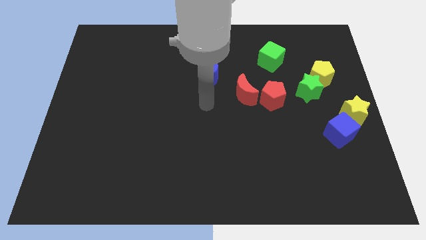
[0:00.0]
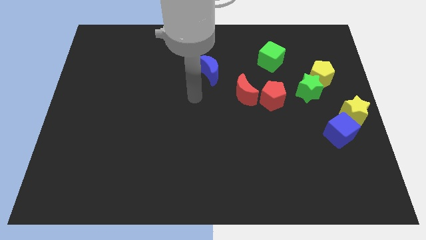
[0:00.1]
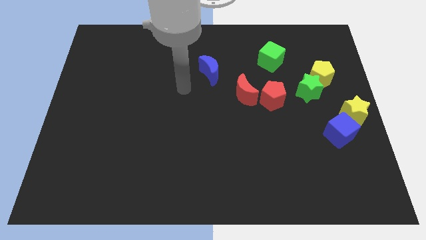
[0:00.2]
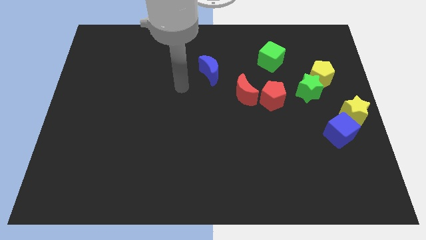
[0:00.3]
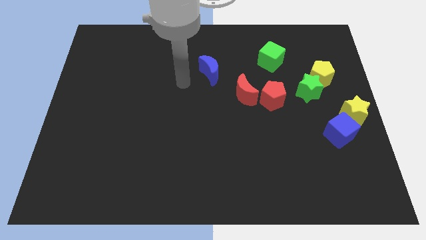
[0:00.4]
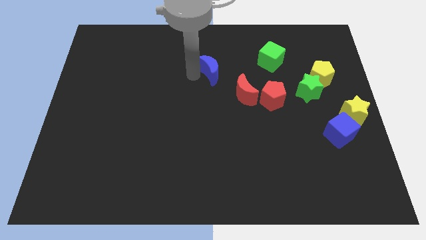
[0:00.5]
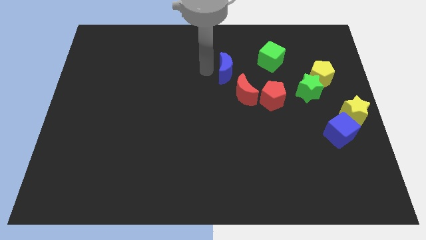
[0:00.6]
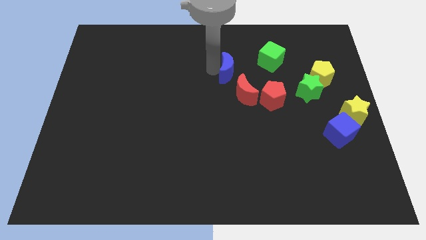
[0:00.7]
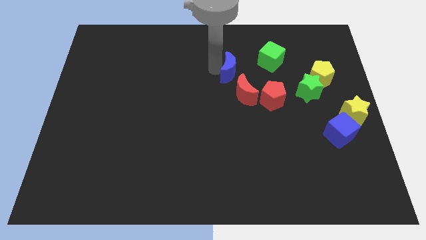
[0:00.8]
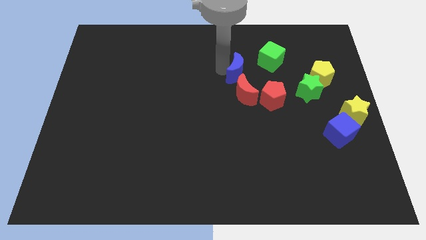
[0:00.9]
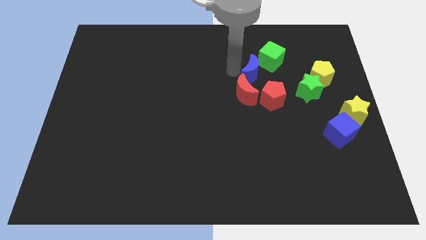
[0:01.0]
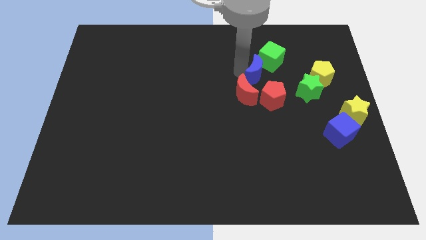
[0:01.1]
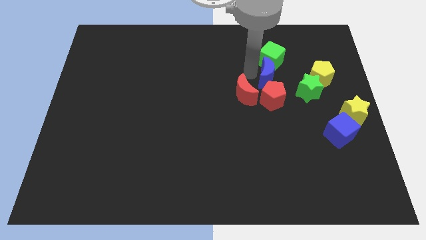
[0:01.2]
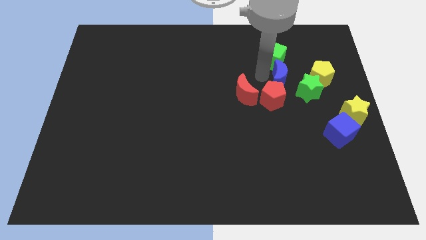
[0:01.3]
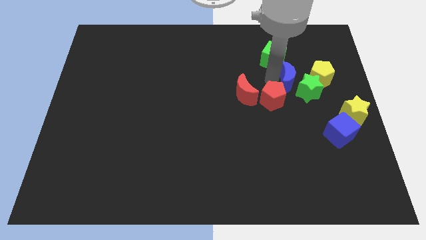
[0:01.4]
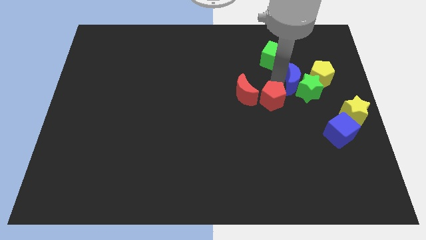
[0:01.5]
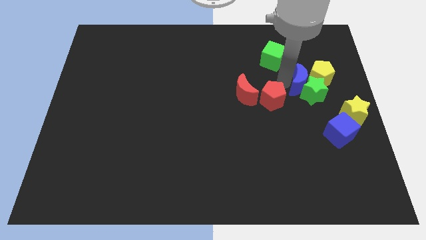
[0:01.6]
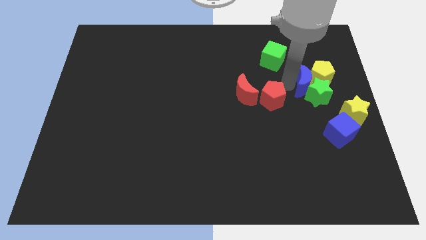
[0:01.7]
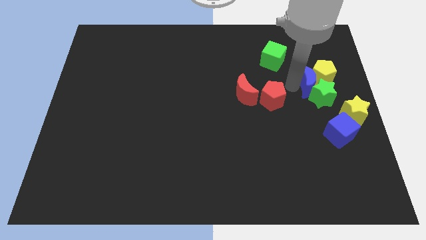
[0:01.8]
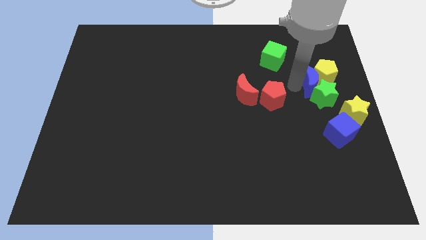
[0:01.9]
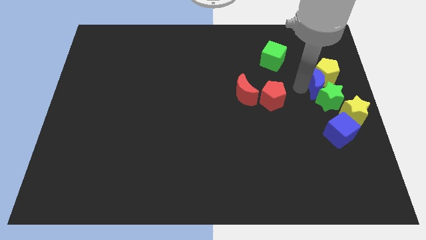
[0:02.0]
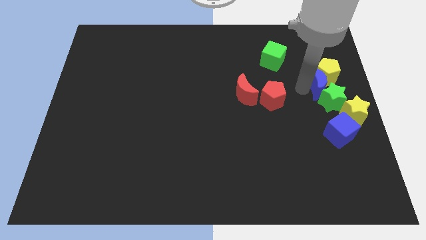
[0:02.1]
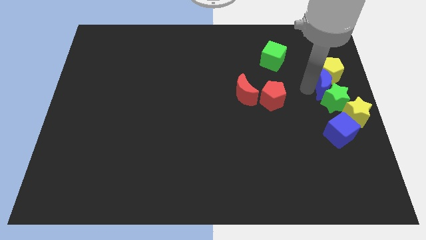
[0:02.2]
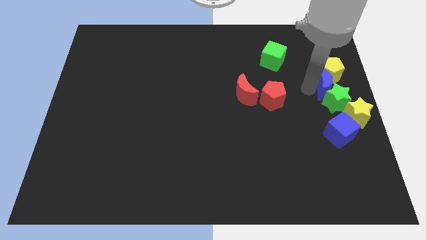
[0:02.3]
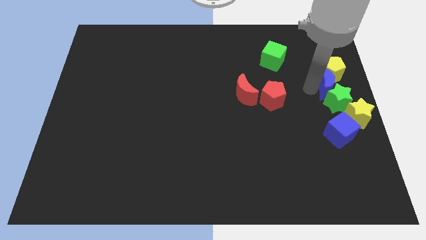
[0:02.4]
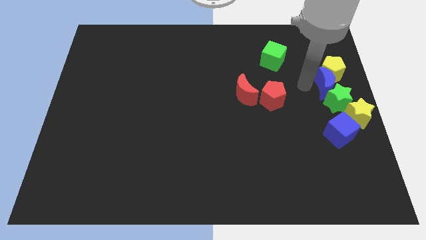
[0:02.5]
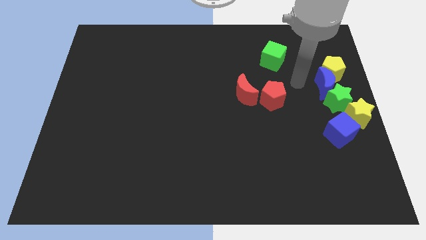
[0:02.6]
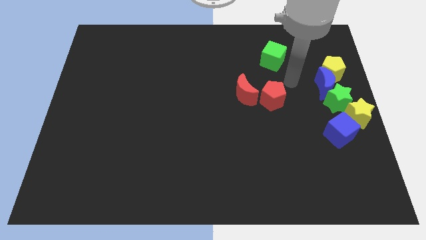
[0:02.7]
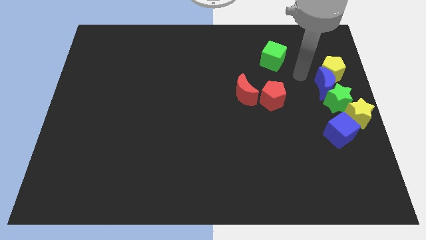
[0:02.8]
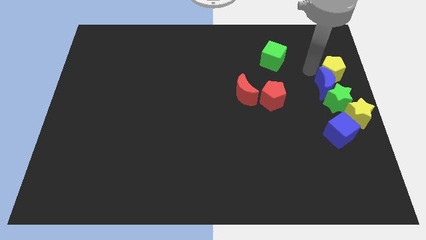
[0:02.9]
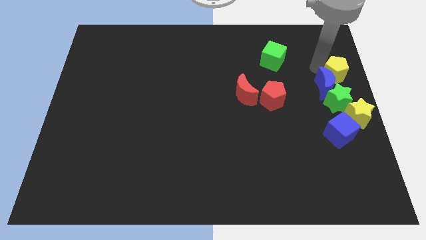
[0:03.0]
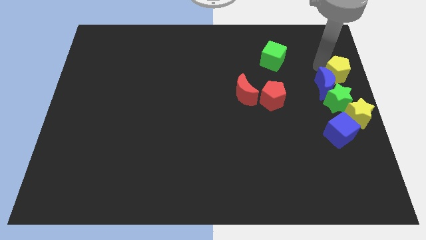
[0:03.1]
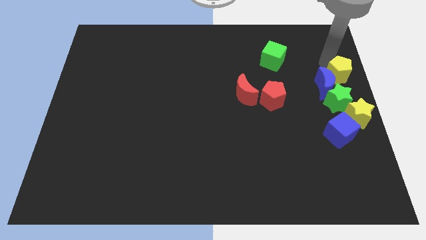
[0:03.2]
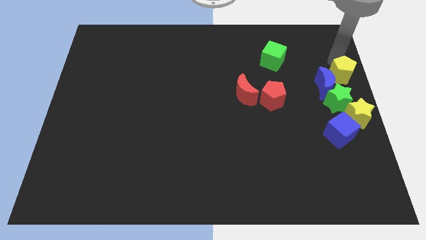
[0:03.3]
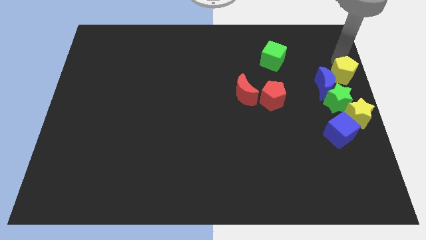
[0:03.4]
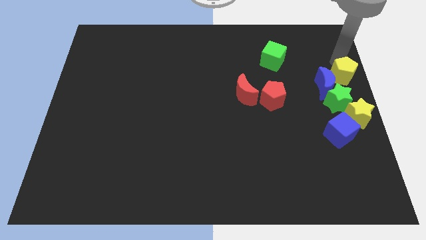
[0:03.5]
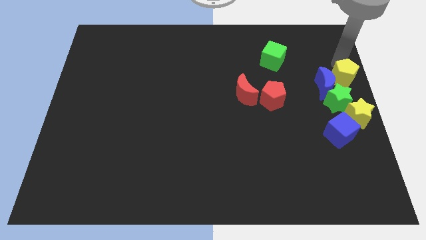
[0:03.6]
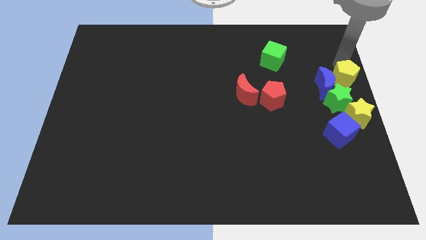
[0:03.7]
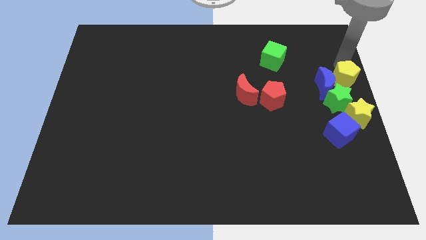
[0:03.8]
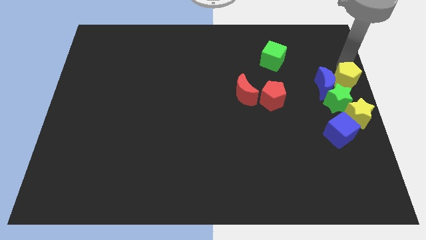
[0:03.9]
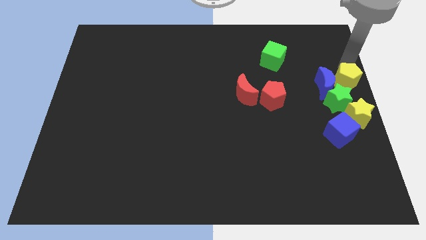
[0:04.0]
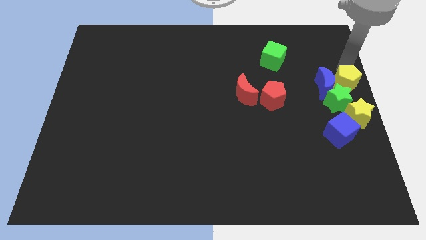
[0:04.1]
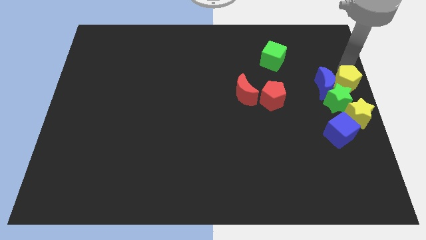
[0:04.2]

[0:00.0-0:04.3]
place the blue crescent and the yellow pentagon above the green star

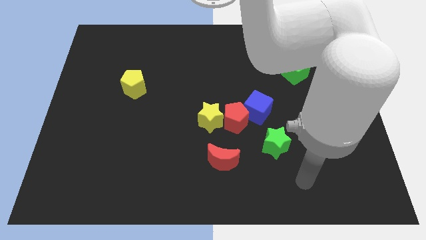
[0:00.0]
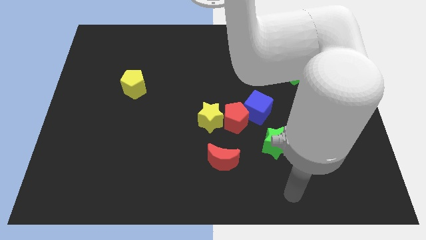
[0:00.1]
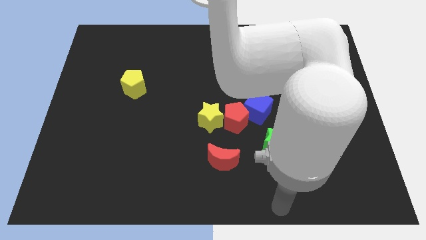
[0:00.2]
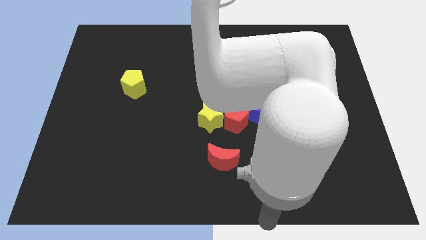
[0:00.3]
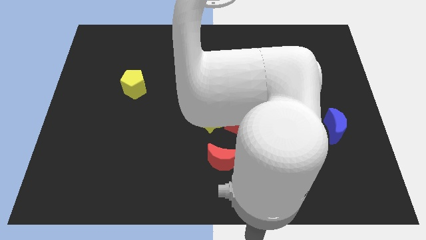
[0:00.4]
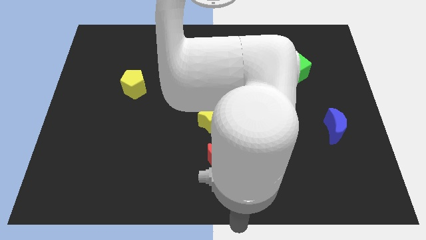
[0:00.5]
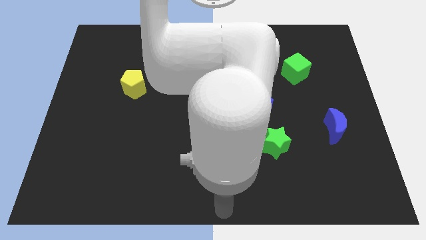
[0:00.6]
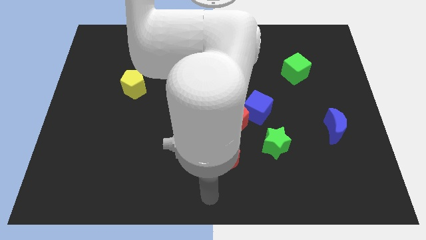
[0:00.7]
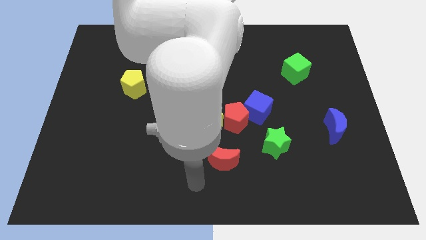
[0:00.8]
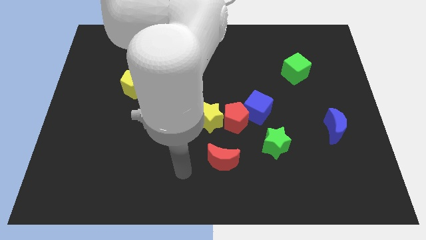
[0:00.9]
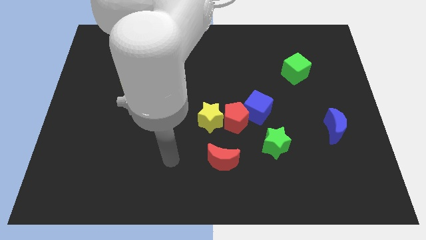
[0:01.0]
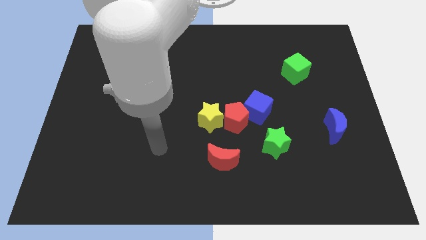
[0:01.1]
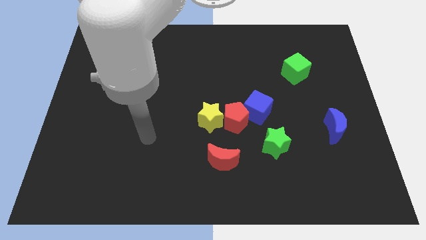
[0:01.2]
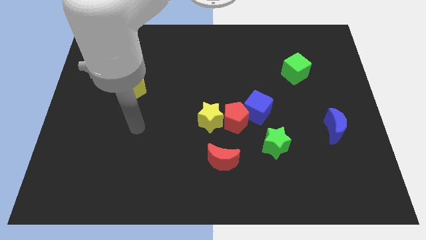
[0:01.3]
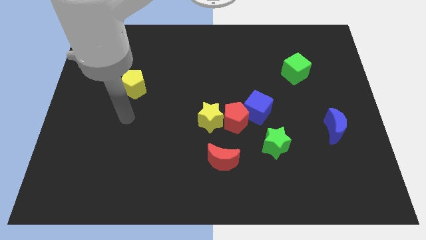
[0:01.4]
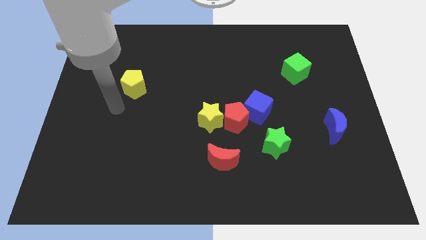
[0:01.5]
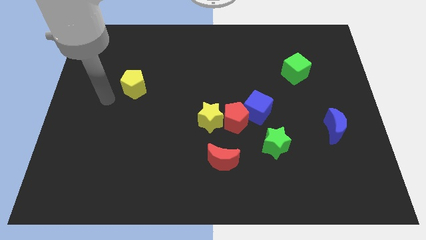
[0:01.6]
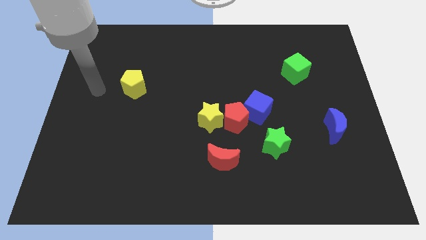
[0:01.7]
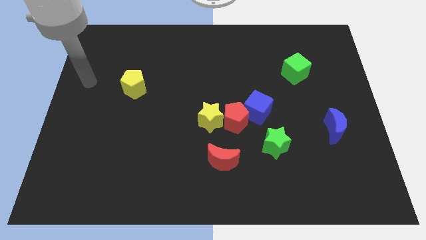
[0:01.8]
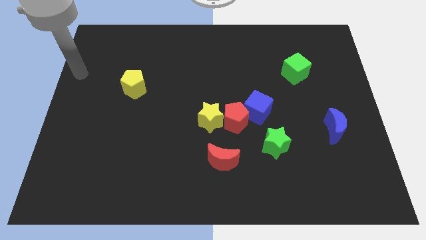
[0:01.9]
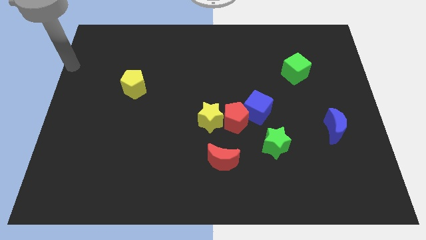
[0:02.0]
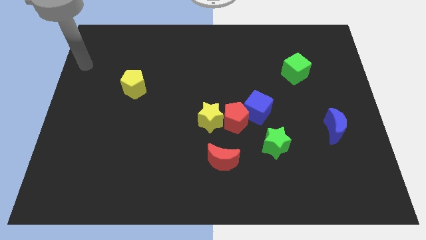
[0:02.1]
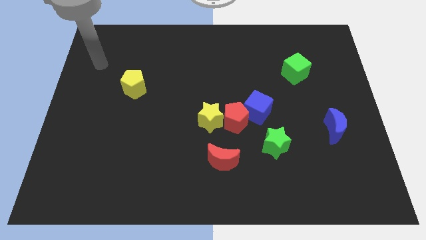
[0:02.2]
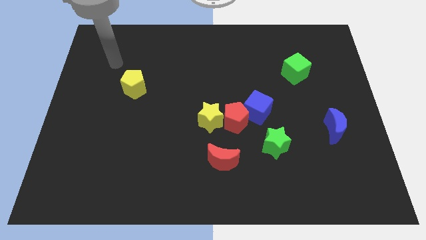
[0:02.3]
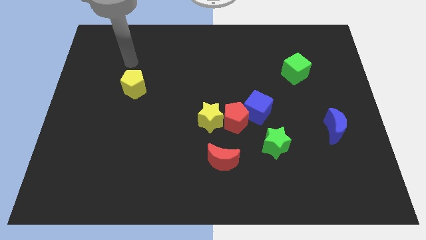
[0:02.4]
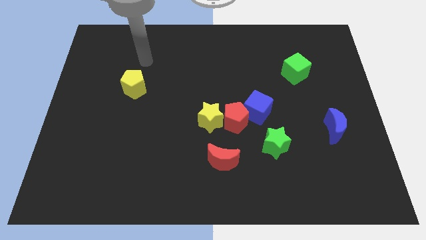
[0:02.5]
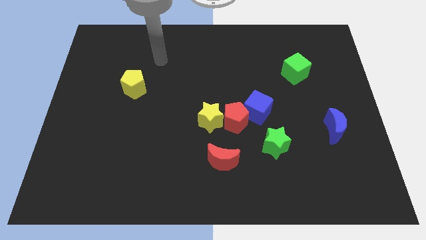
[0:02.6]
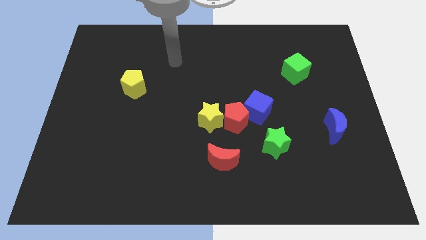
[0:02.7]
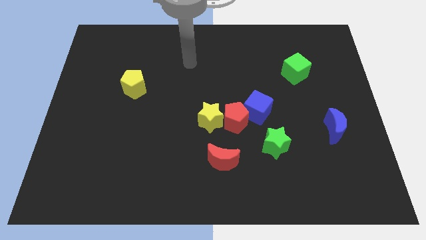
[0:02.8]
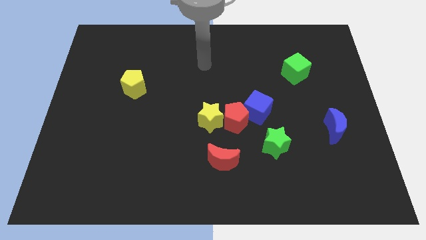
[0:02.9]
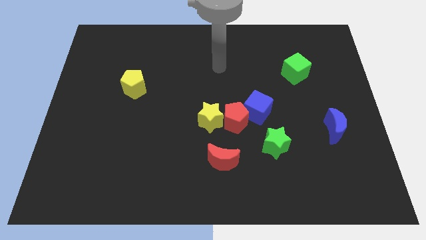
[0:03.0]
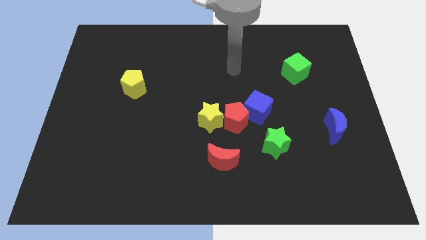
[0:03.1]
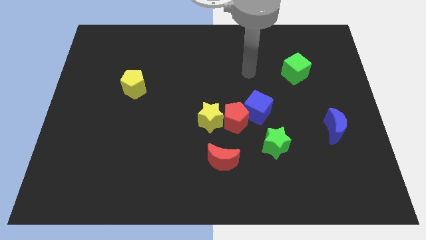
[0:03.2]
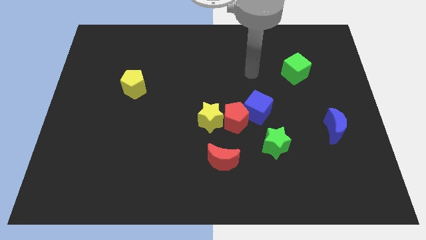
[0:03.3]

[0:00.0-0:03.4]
place your arm at the top of the blue cube

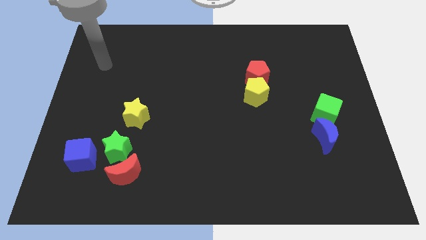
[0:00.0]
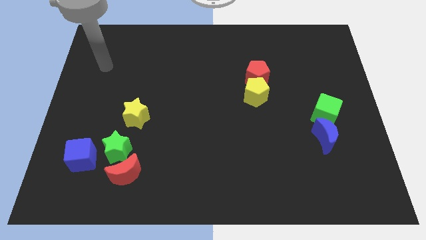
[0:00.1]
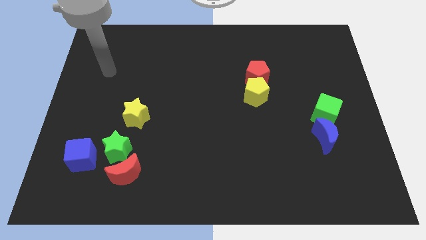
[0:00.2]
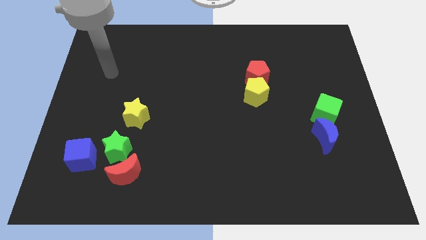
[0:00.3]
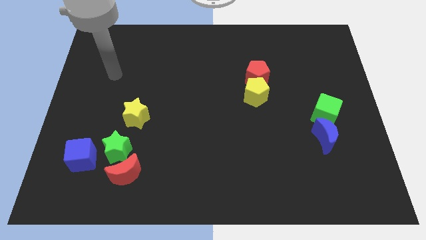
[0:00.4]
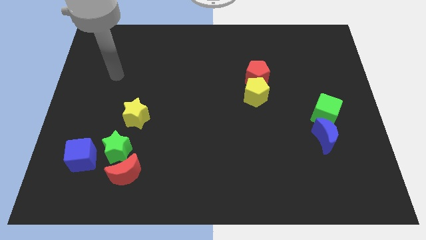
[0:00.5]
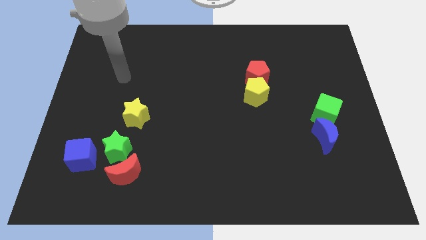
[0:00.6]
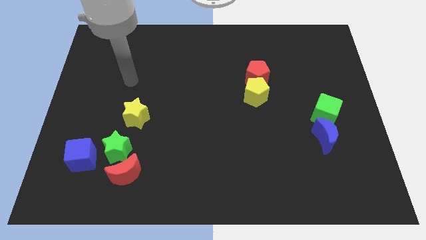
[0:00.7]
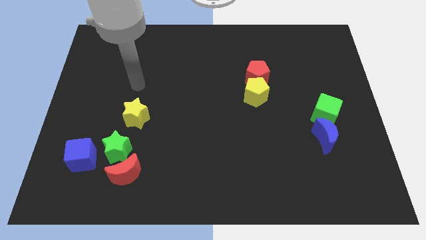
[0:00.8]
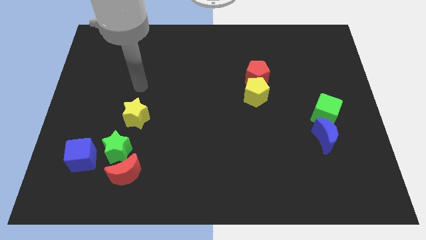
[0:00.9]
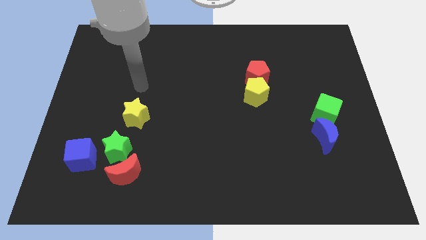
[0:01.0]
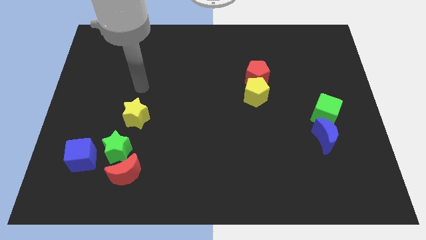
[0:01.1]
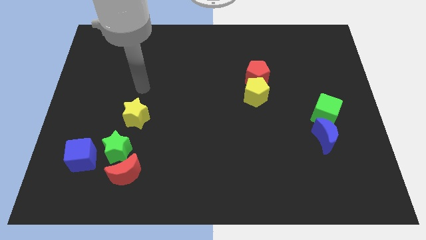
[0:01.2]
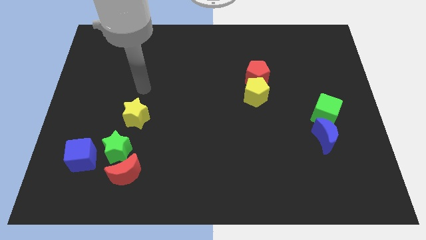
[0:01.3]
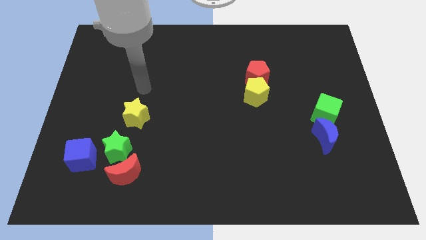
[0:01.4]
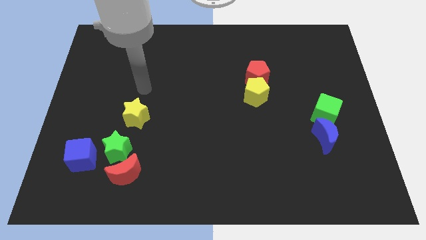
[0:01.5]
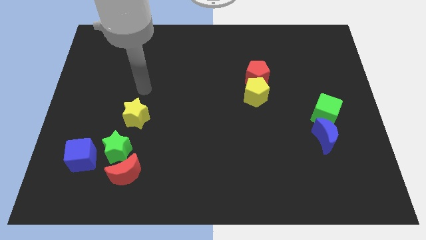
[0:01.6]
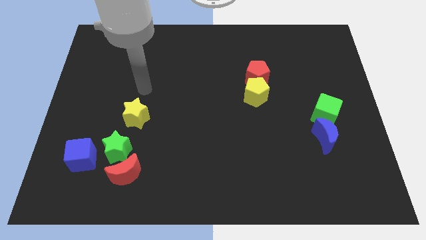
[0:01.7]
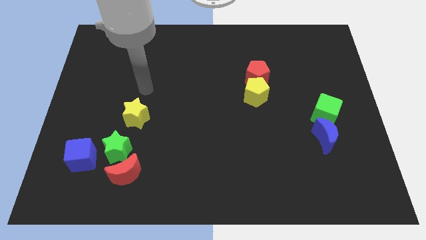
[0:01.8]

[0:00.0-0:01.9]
move your arm to the top side of the yellow star
